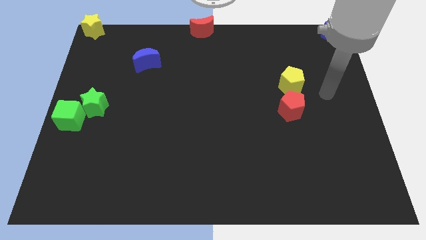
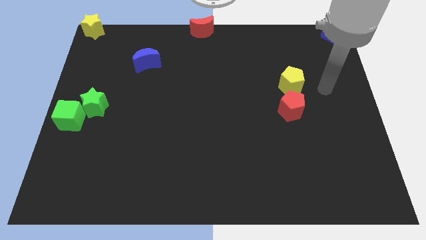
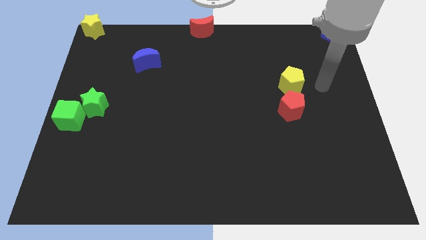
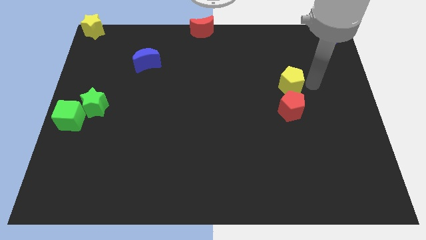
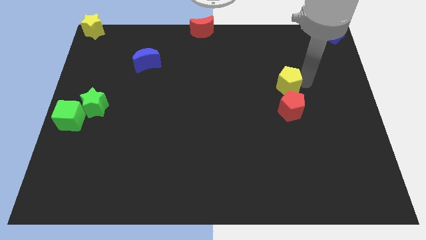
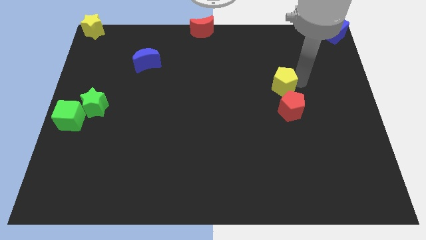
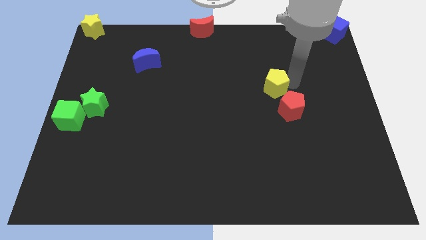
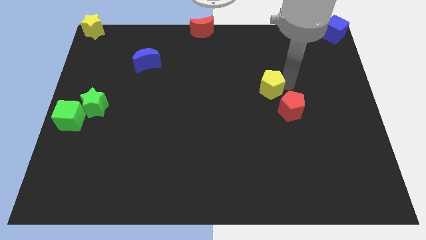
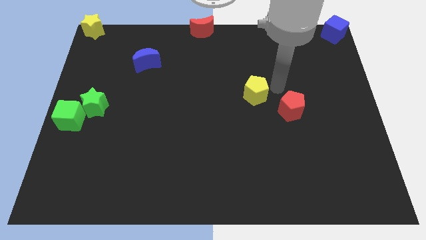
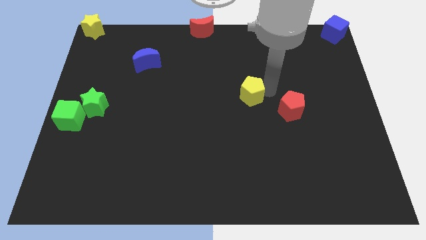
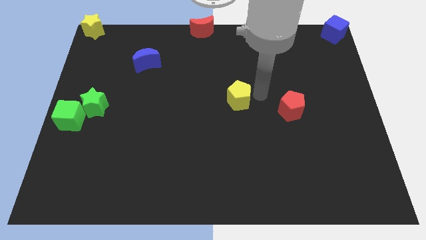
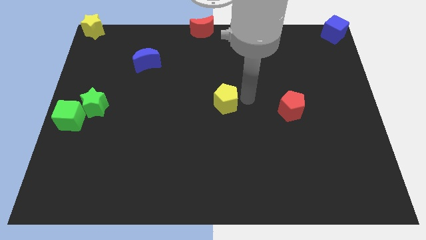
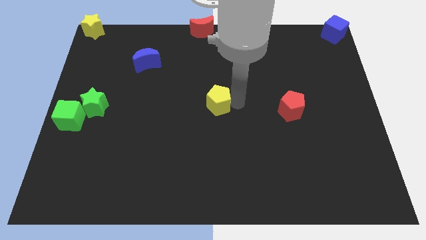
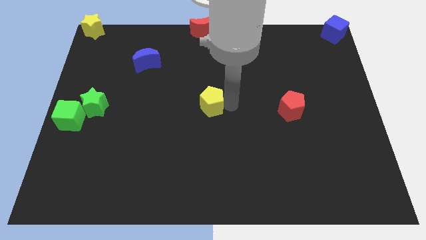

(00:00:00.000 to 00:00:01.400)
drag the yellow pentagon to the center

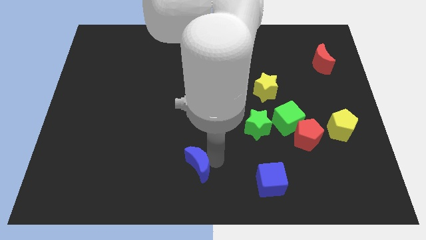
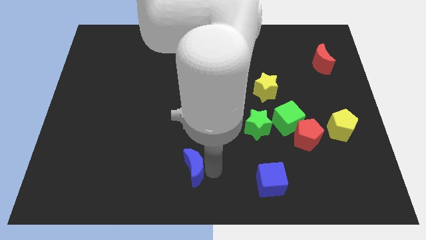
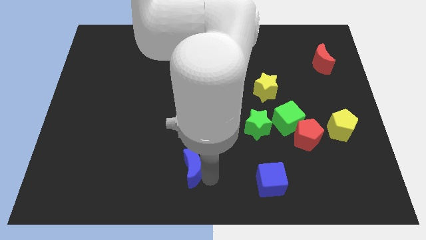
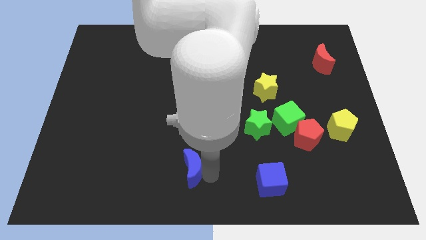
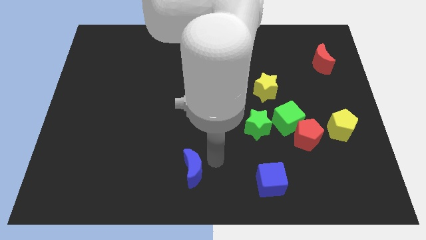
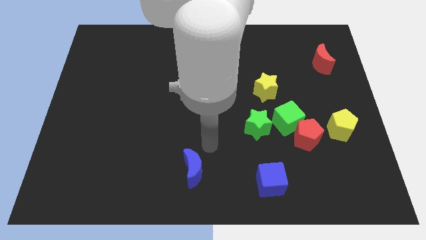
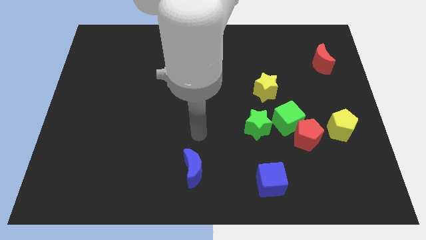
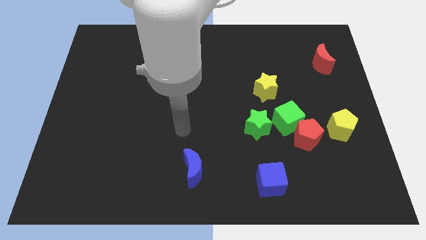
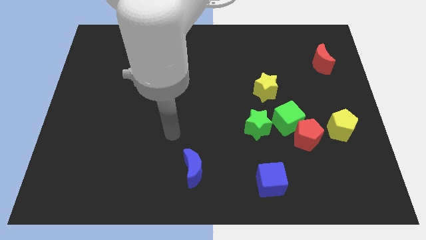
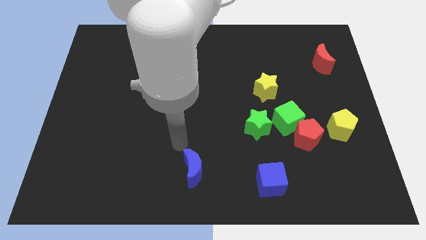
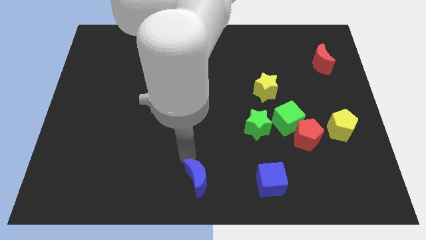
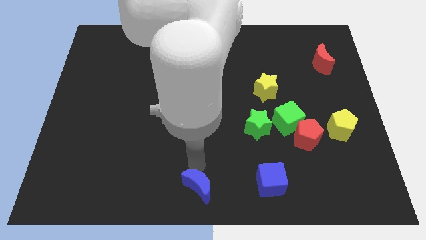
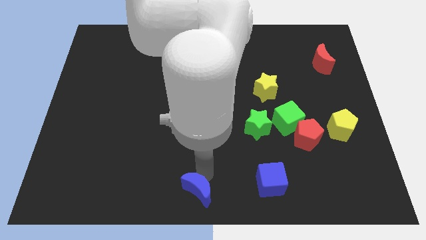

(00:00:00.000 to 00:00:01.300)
place the blue crescent horizontally to the left side of the blue cube

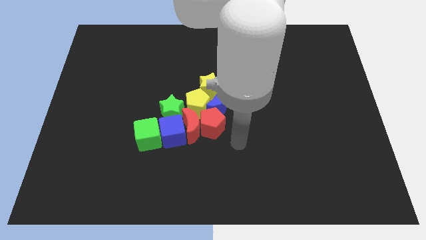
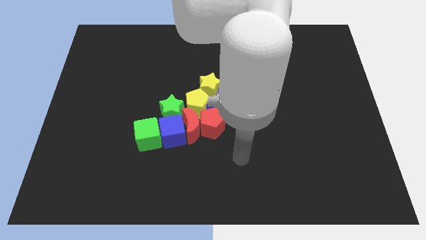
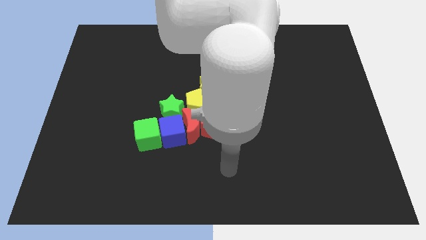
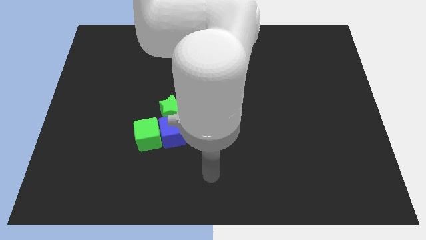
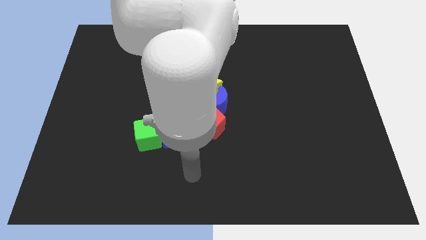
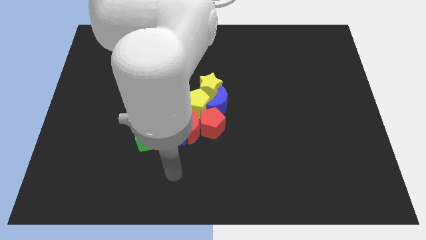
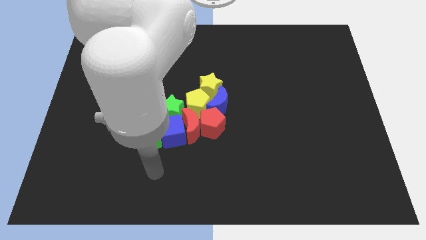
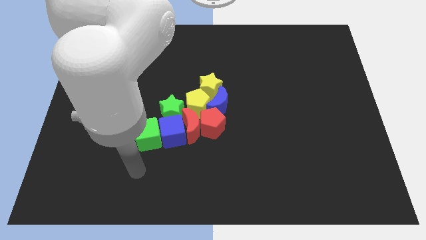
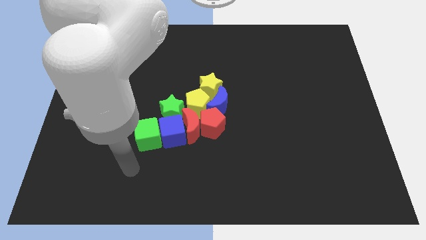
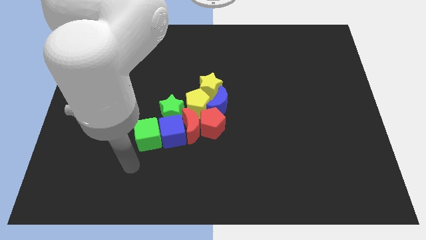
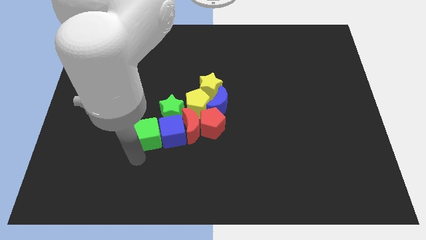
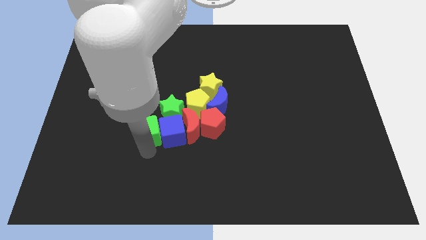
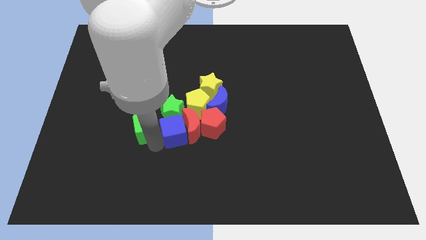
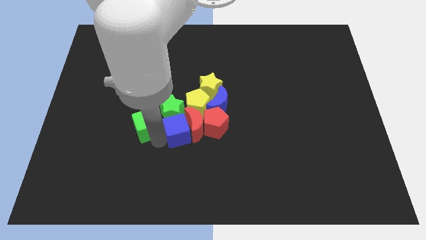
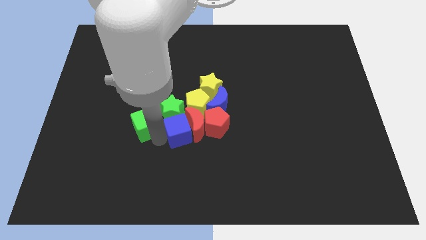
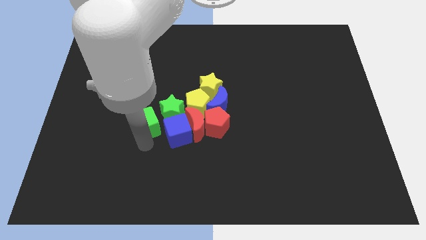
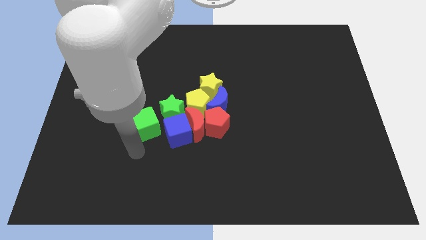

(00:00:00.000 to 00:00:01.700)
separate the green cube from the blue cube

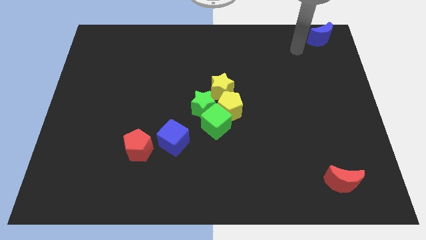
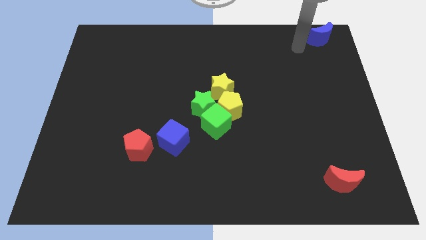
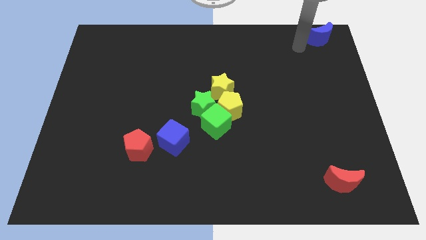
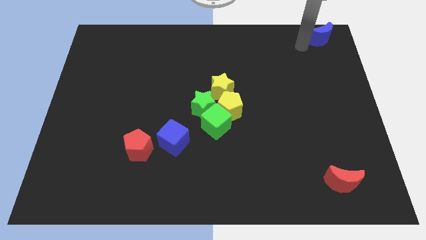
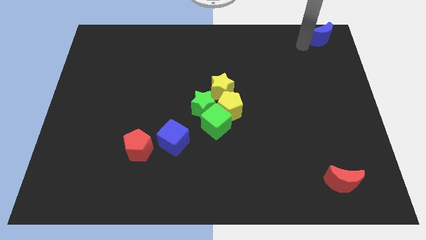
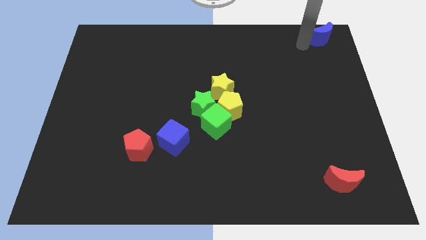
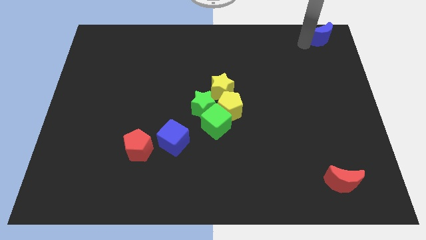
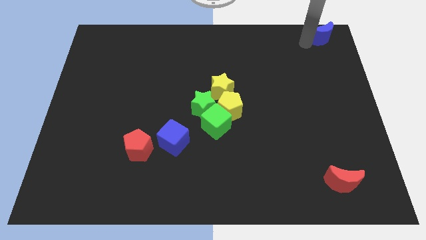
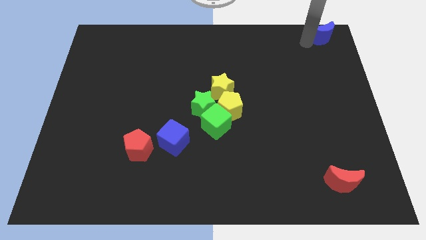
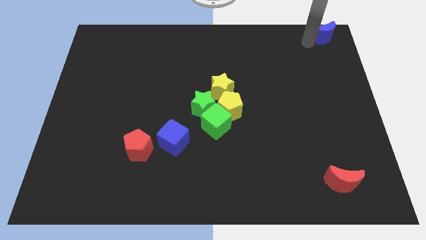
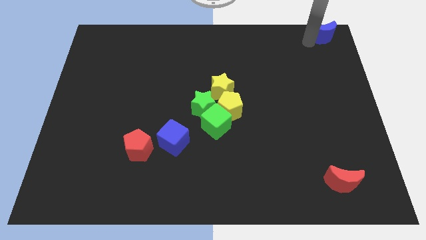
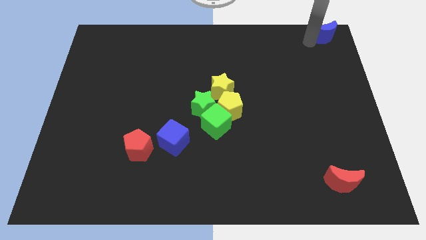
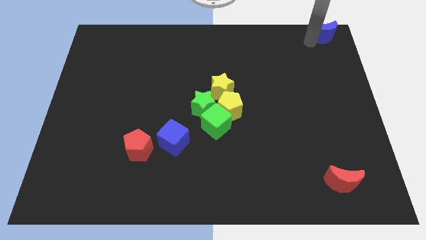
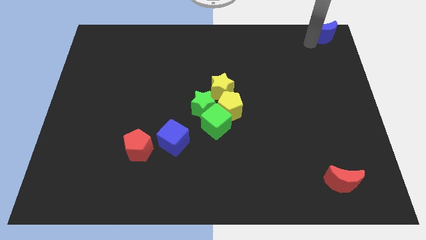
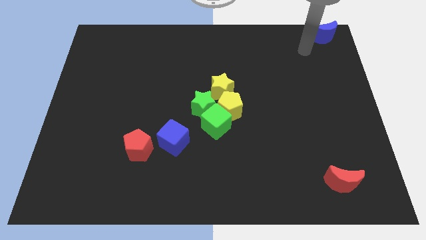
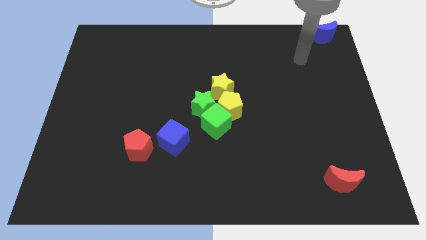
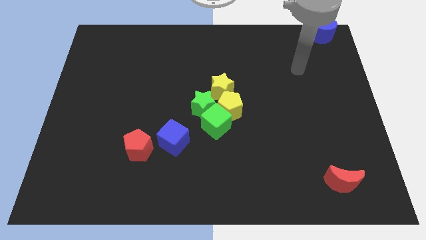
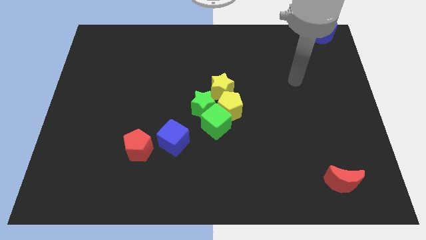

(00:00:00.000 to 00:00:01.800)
move the blue cube towards the top right corner of the board

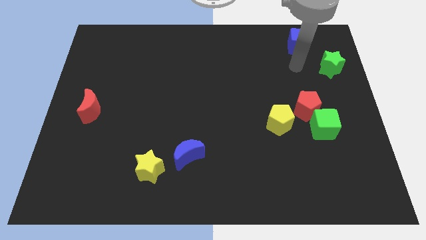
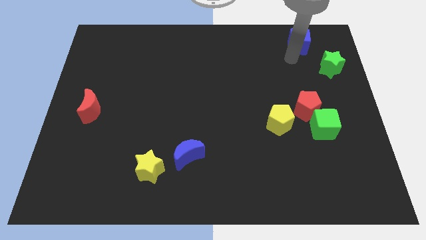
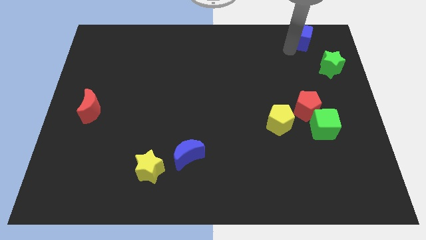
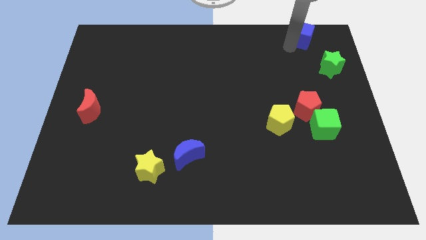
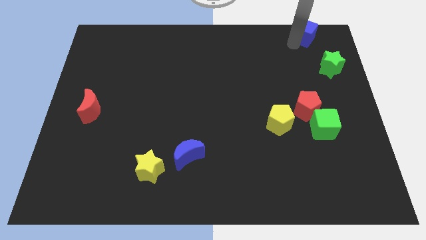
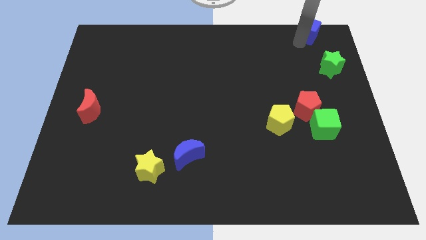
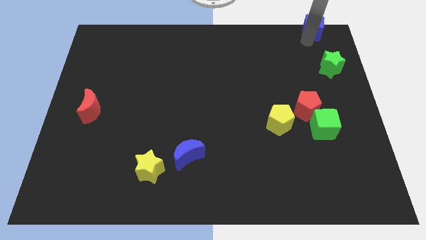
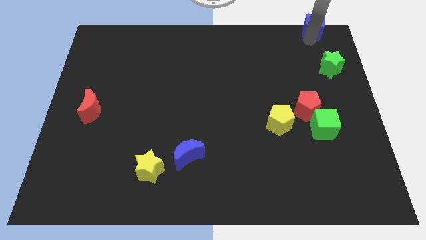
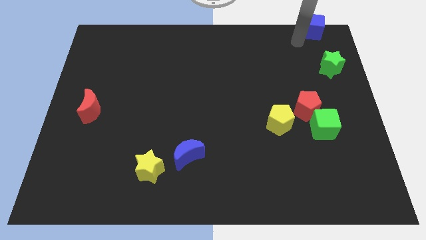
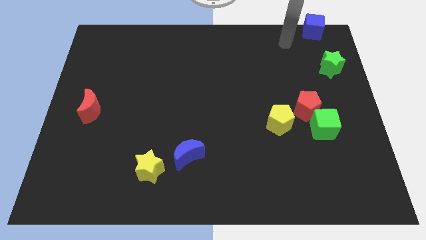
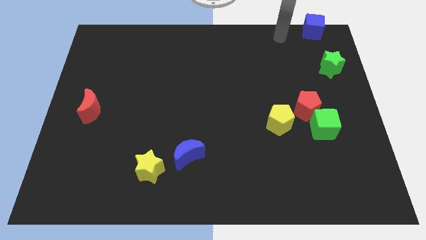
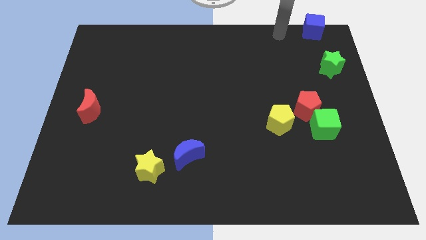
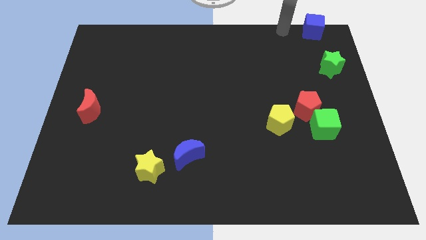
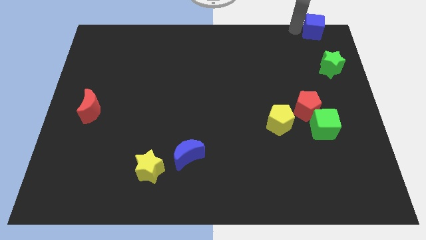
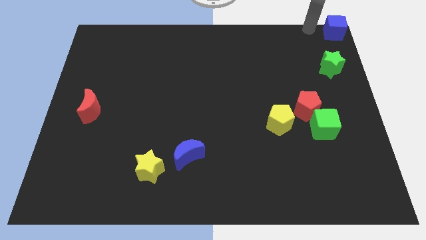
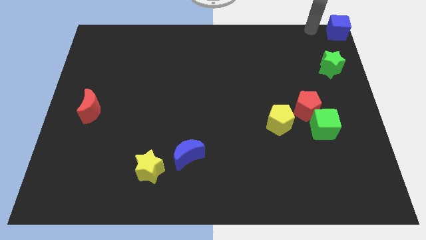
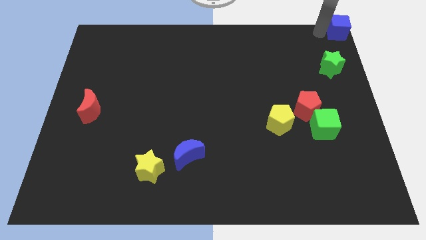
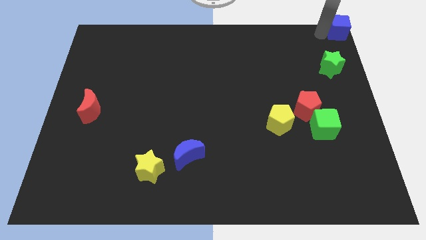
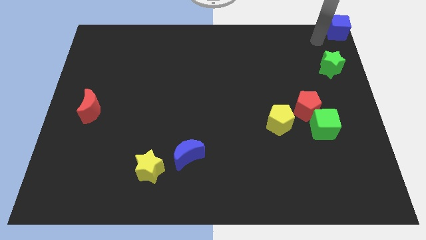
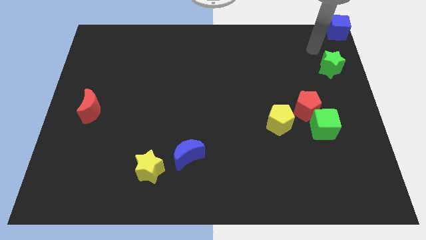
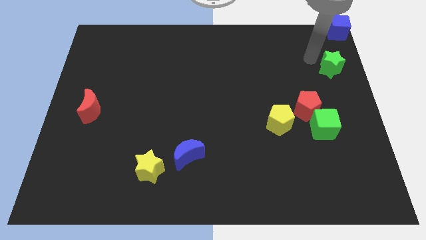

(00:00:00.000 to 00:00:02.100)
move the blue cube to the top right of the board

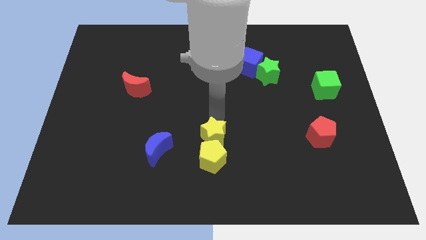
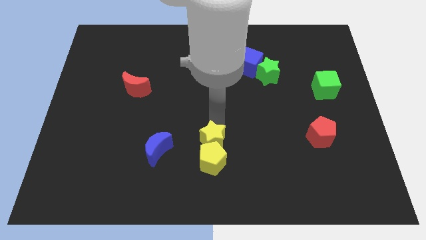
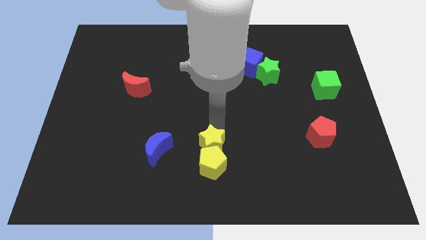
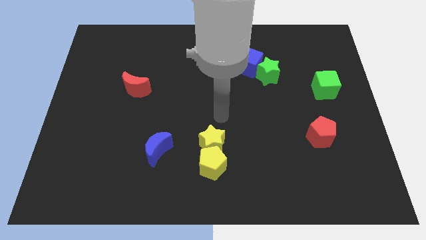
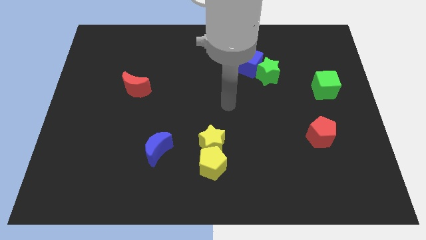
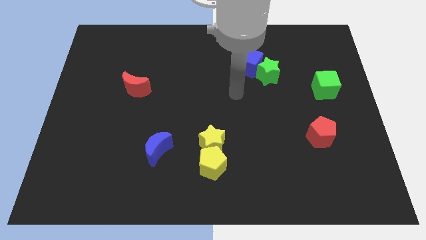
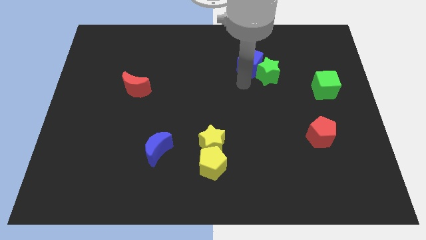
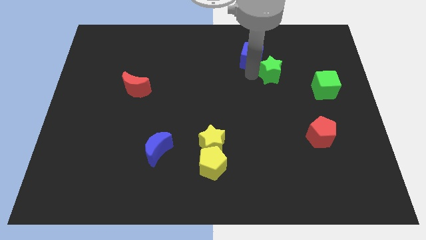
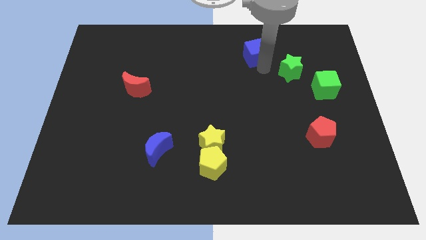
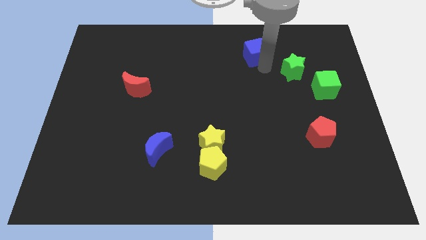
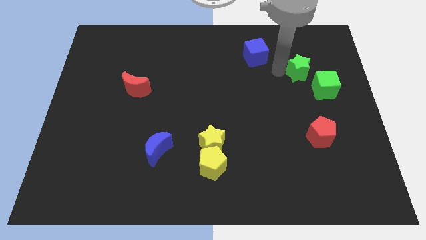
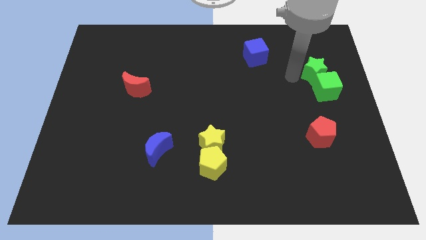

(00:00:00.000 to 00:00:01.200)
separate green star away from blue cube
